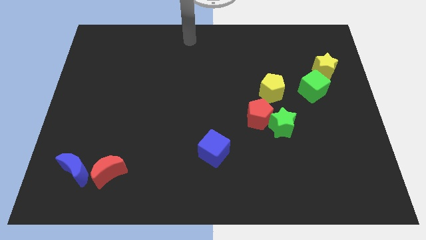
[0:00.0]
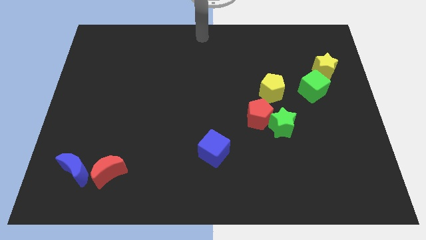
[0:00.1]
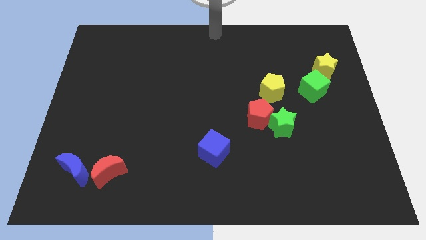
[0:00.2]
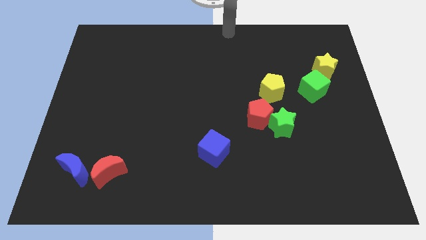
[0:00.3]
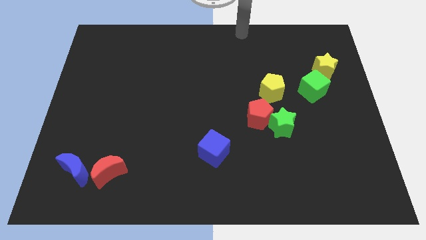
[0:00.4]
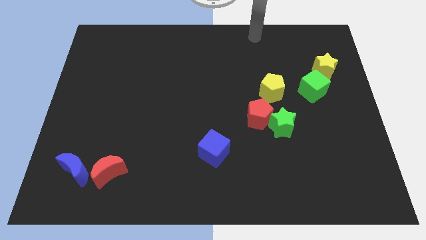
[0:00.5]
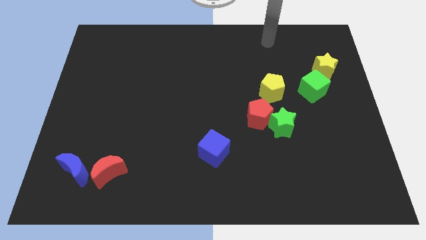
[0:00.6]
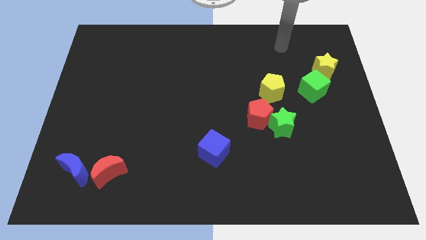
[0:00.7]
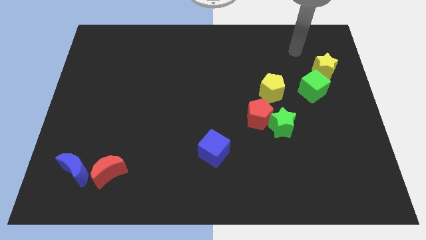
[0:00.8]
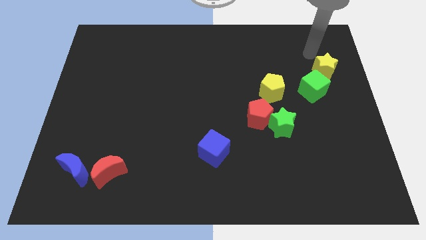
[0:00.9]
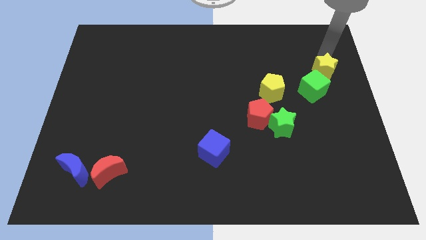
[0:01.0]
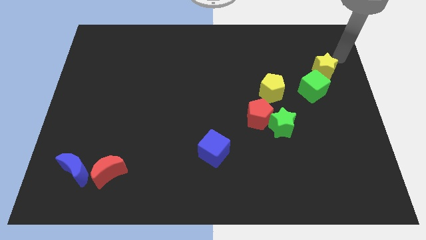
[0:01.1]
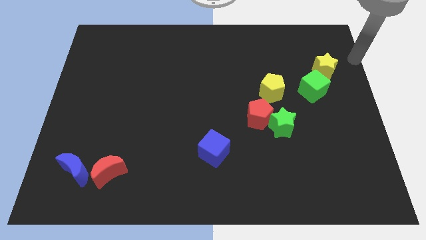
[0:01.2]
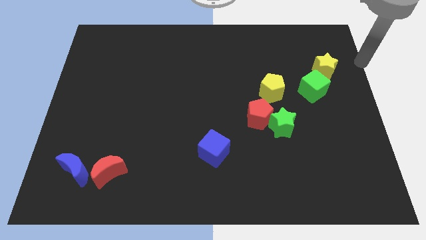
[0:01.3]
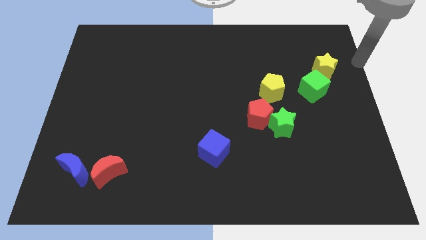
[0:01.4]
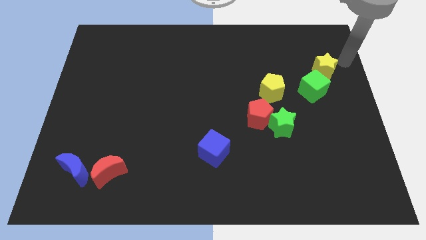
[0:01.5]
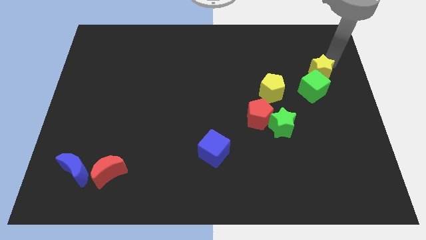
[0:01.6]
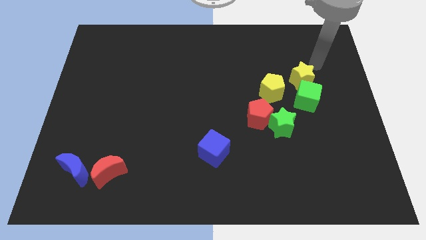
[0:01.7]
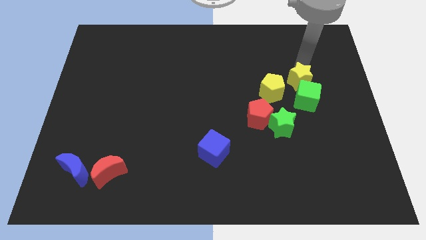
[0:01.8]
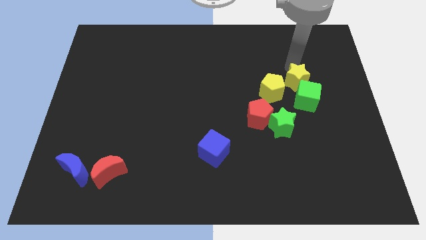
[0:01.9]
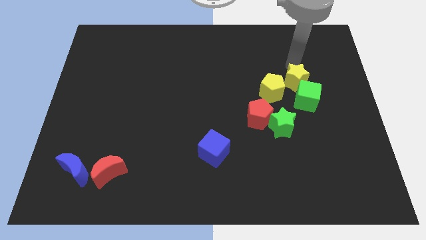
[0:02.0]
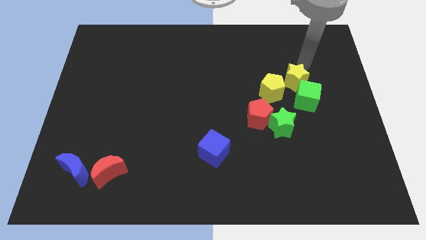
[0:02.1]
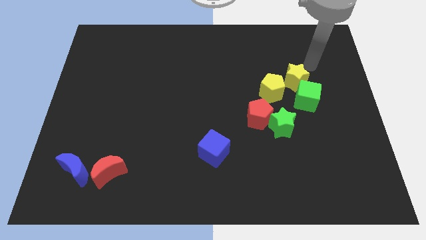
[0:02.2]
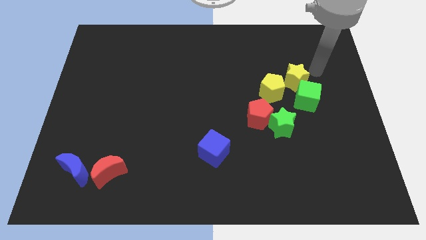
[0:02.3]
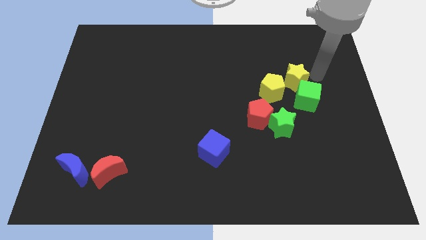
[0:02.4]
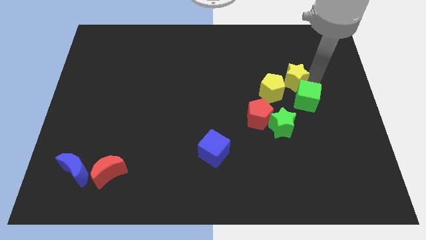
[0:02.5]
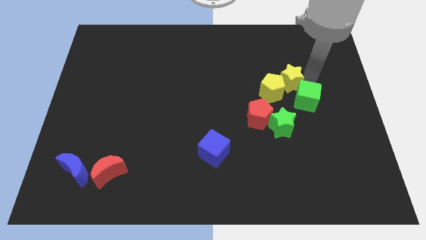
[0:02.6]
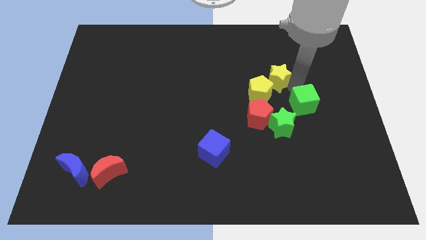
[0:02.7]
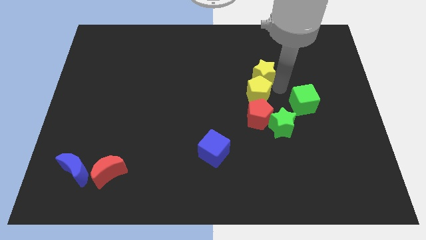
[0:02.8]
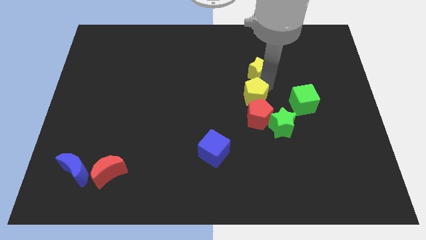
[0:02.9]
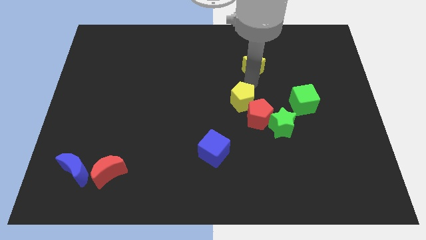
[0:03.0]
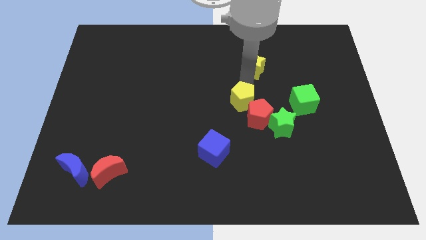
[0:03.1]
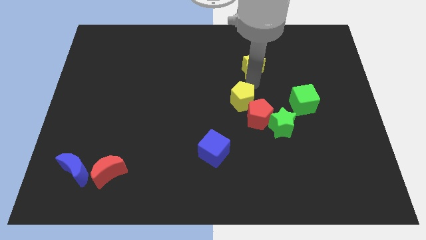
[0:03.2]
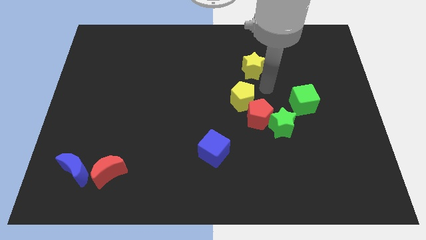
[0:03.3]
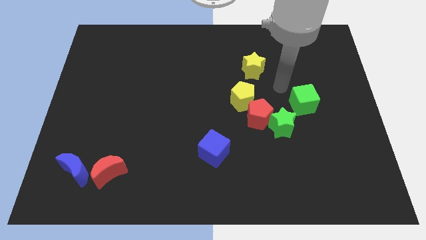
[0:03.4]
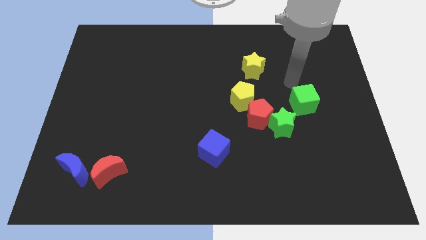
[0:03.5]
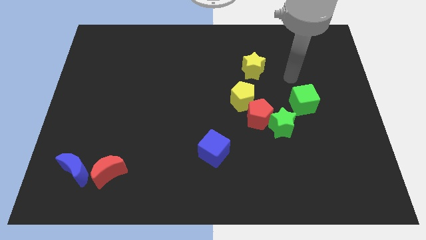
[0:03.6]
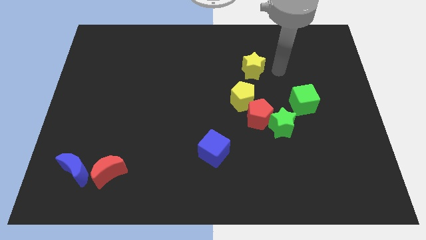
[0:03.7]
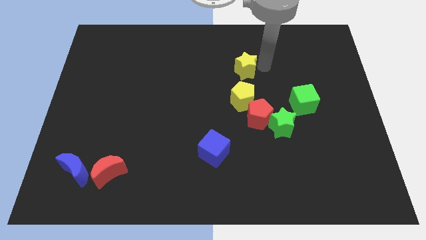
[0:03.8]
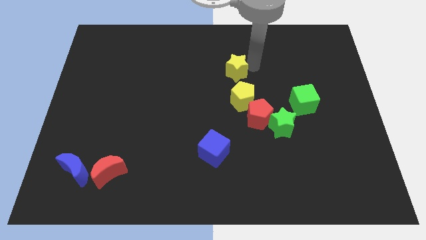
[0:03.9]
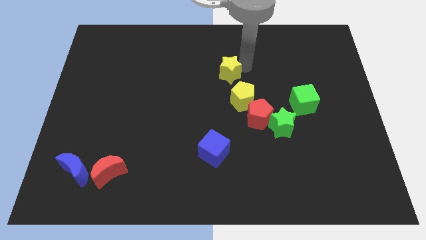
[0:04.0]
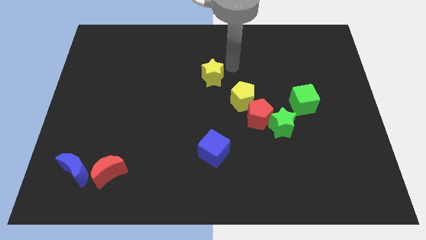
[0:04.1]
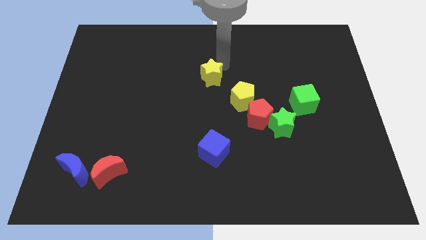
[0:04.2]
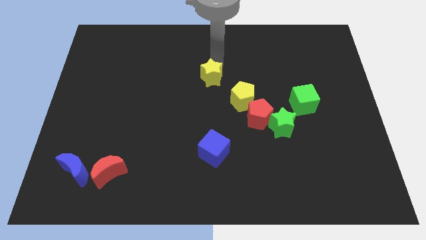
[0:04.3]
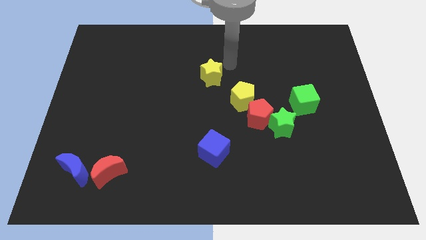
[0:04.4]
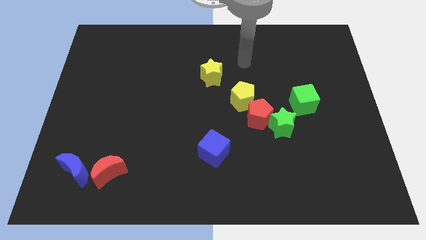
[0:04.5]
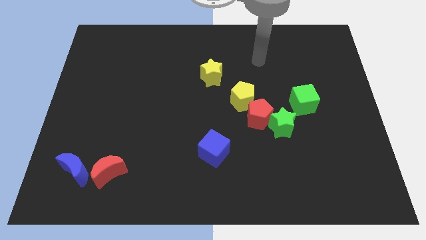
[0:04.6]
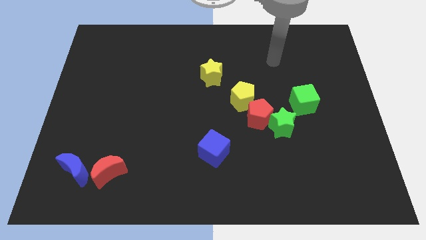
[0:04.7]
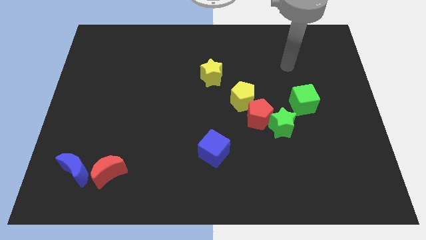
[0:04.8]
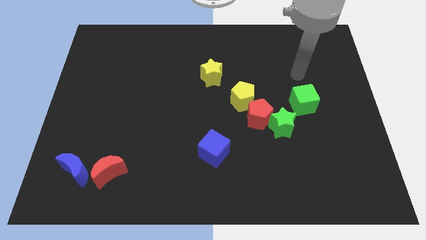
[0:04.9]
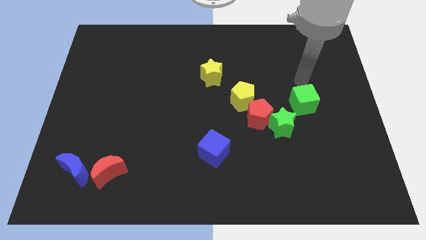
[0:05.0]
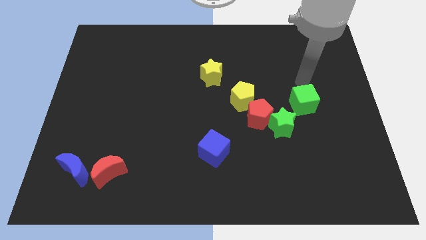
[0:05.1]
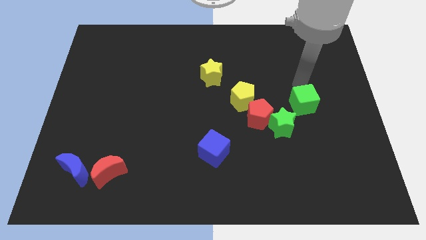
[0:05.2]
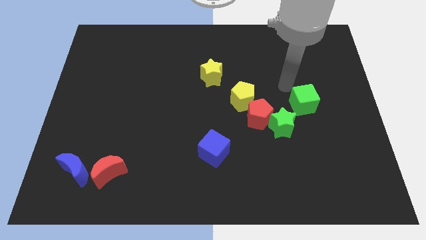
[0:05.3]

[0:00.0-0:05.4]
separate the yellow star from the green cube

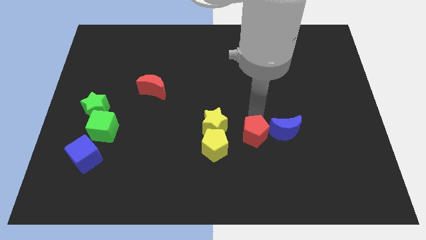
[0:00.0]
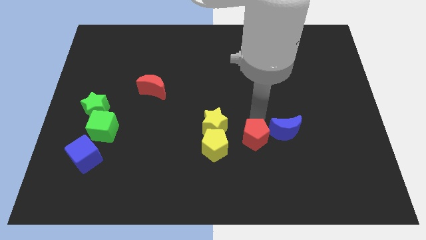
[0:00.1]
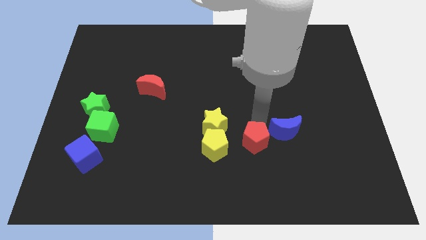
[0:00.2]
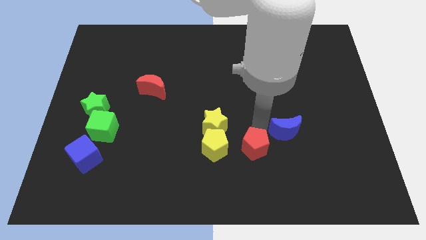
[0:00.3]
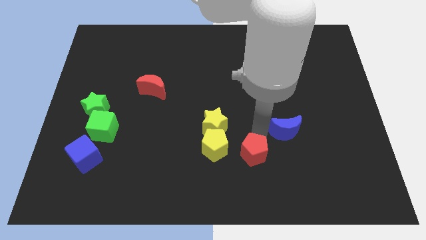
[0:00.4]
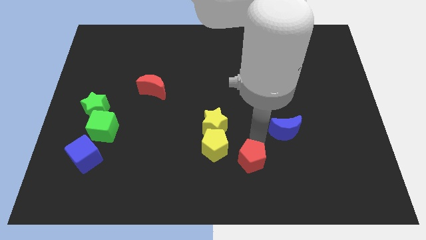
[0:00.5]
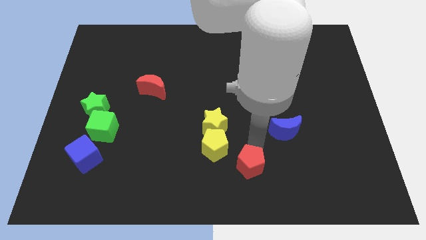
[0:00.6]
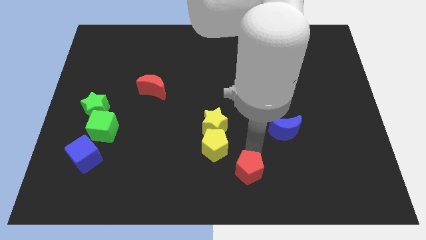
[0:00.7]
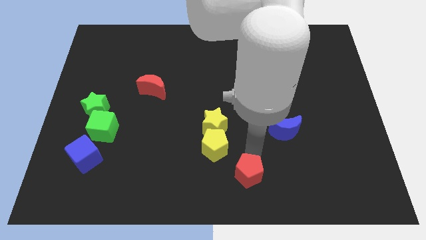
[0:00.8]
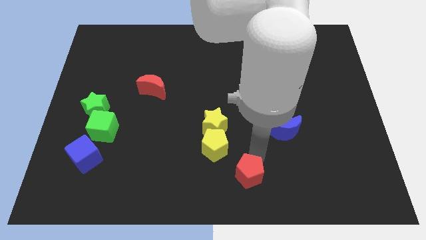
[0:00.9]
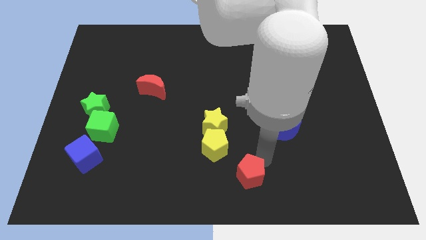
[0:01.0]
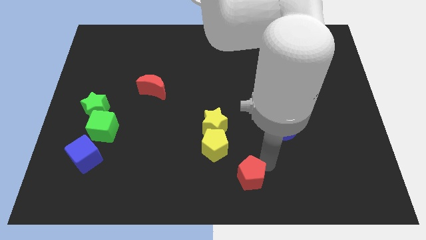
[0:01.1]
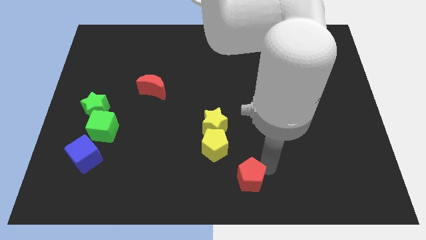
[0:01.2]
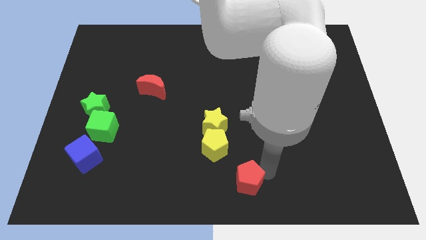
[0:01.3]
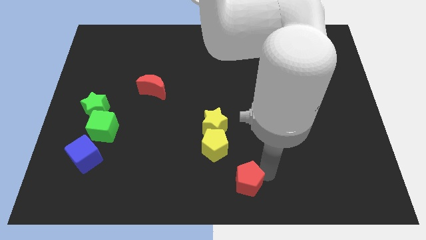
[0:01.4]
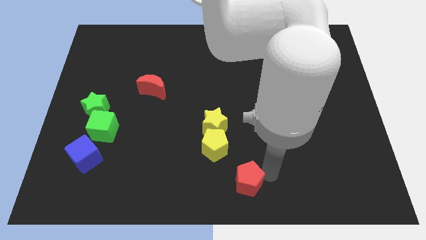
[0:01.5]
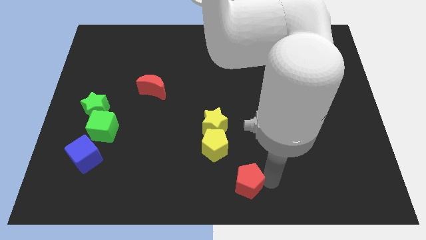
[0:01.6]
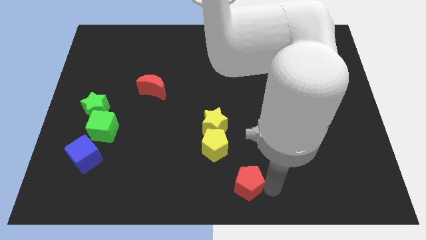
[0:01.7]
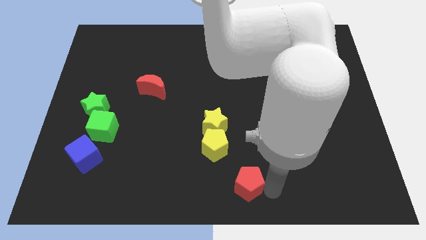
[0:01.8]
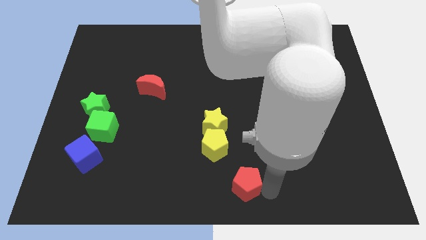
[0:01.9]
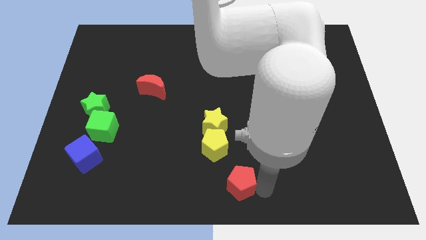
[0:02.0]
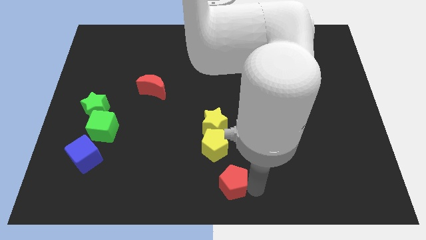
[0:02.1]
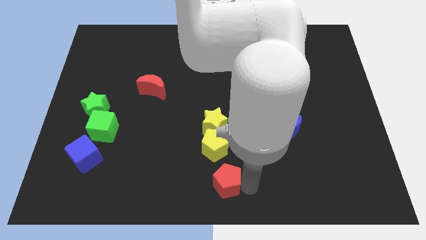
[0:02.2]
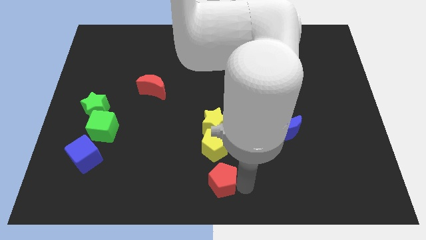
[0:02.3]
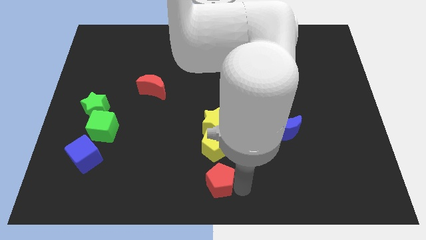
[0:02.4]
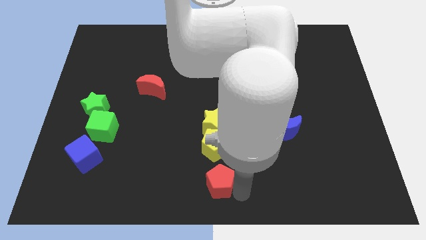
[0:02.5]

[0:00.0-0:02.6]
place the red pentagon below the yellow pentagon

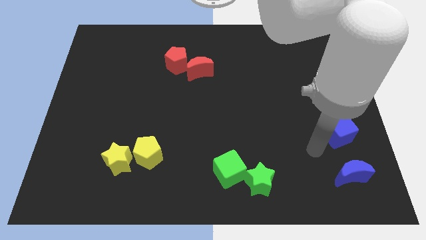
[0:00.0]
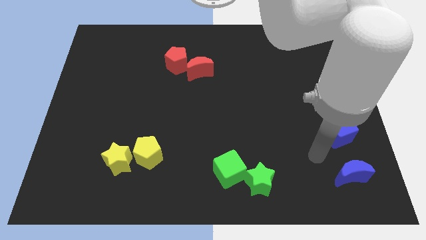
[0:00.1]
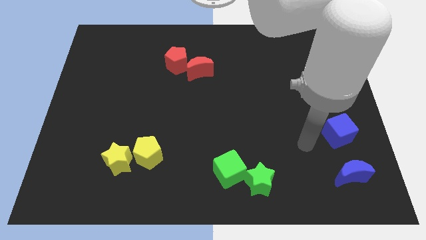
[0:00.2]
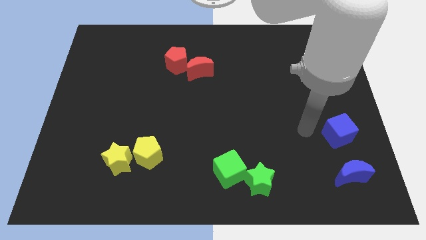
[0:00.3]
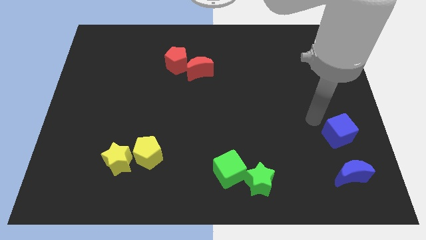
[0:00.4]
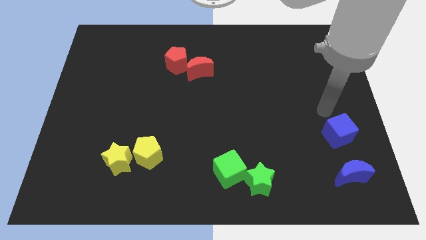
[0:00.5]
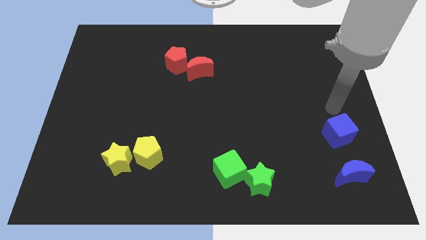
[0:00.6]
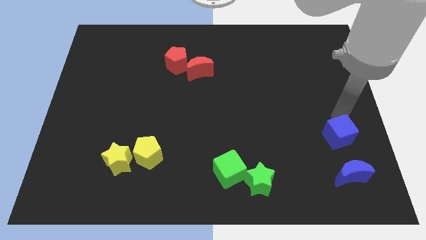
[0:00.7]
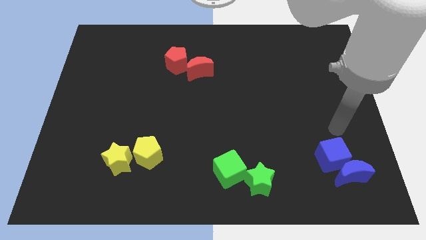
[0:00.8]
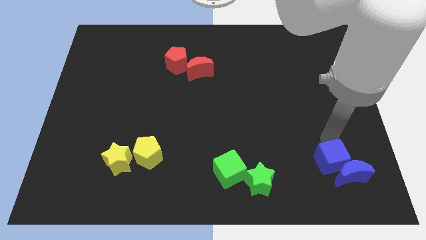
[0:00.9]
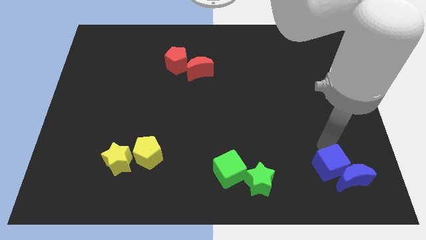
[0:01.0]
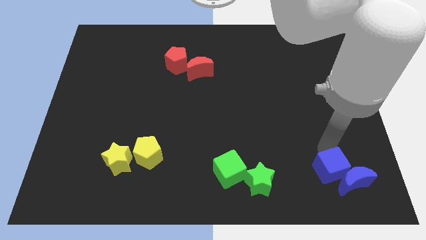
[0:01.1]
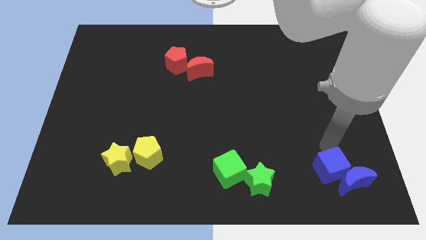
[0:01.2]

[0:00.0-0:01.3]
push the blue crescent into the blue cube
